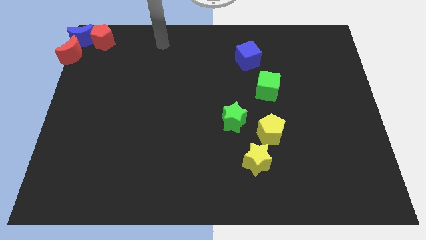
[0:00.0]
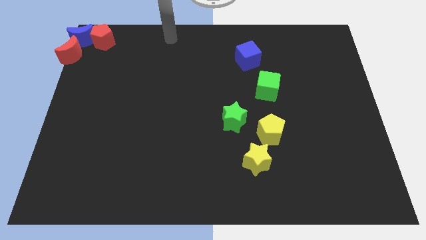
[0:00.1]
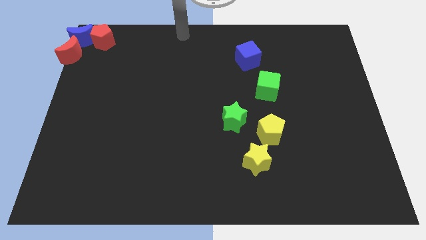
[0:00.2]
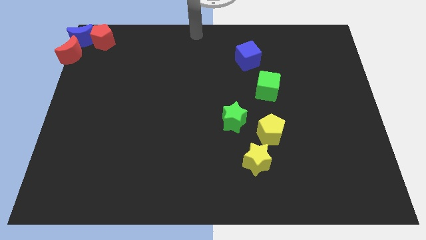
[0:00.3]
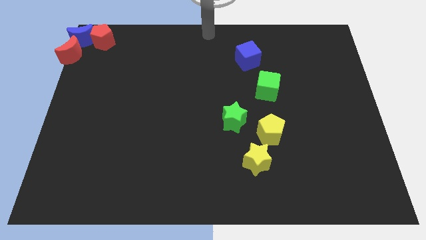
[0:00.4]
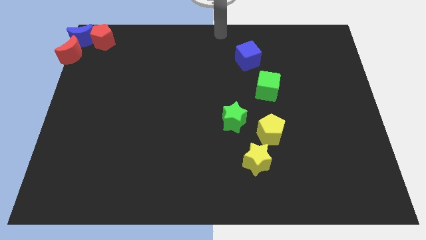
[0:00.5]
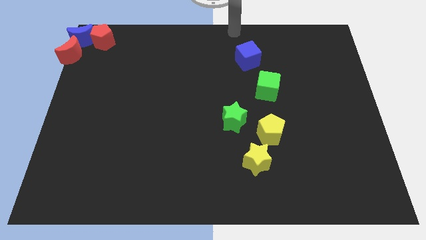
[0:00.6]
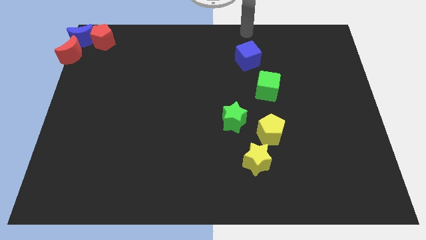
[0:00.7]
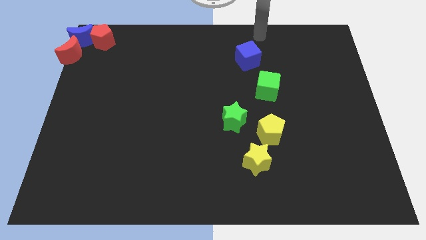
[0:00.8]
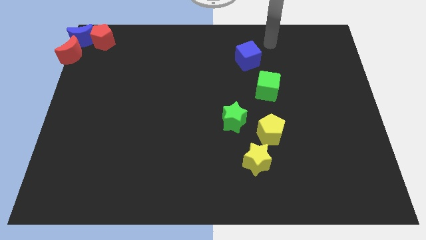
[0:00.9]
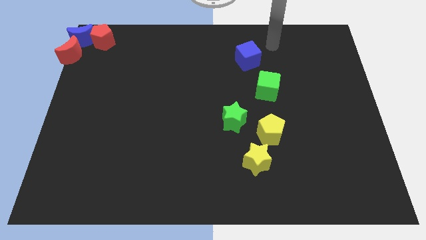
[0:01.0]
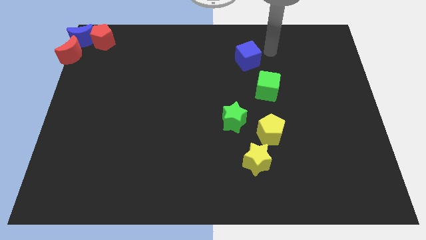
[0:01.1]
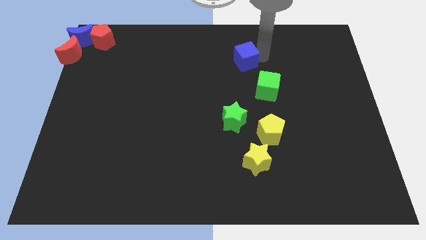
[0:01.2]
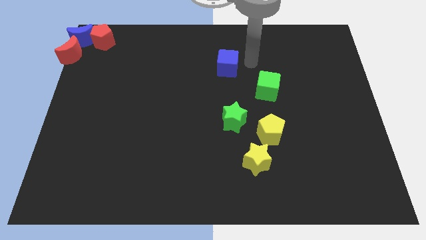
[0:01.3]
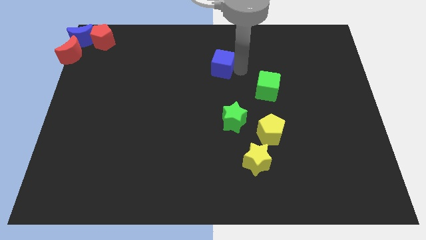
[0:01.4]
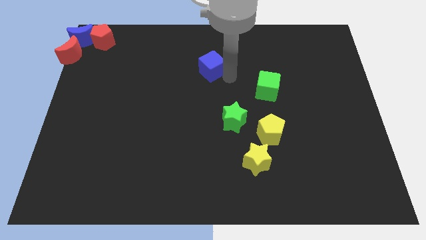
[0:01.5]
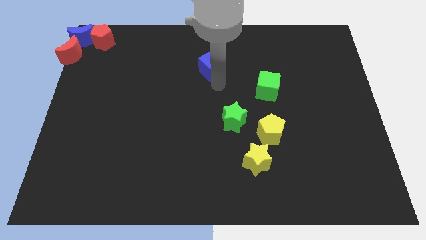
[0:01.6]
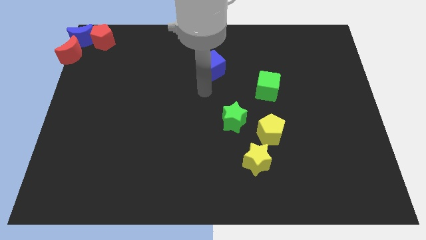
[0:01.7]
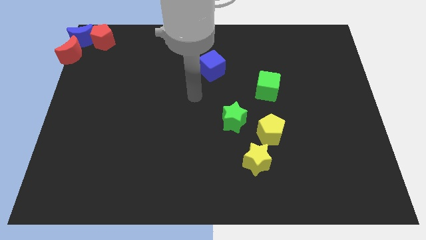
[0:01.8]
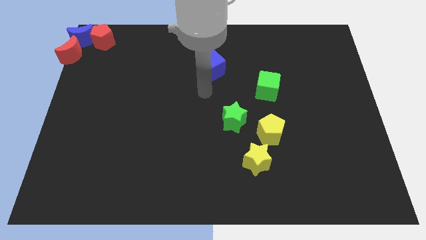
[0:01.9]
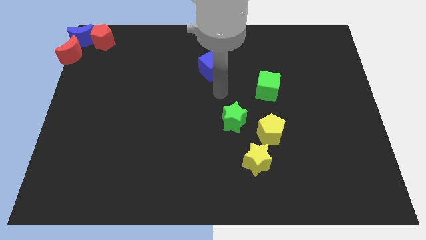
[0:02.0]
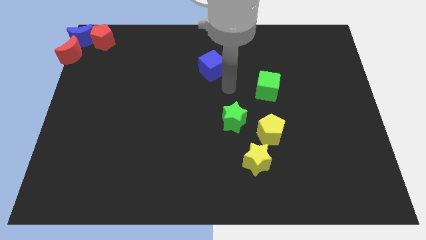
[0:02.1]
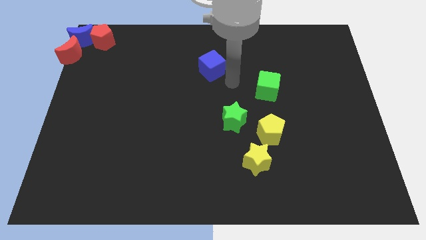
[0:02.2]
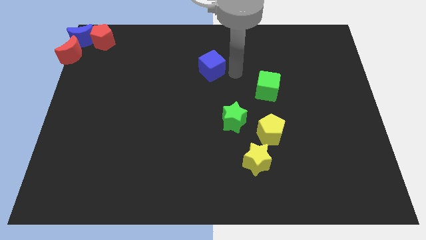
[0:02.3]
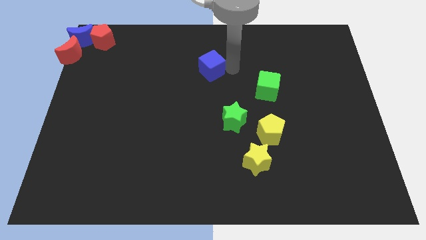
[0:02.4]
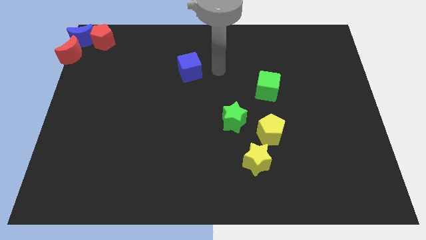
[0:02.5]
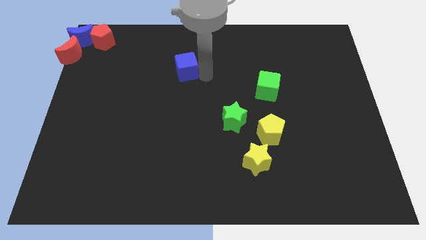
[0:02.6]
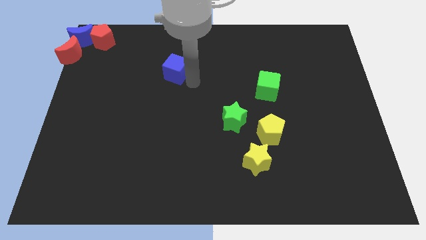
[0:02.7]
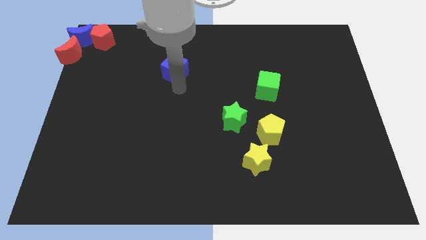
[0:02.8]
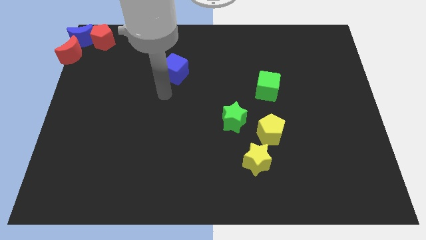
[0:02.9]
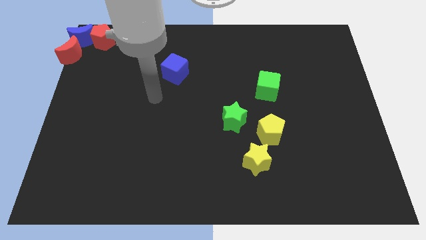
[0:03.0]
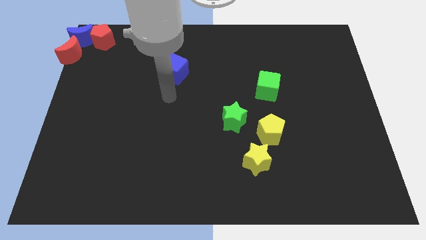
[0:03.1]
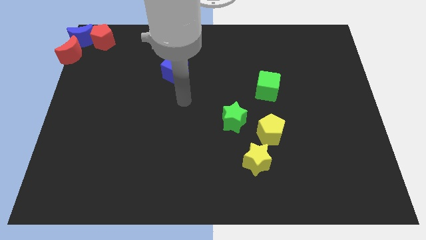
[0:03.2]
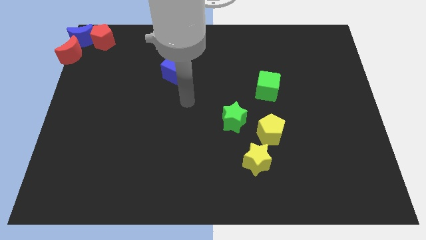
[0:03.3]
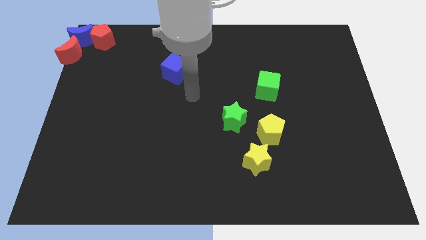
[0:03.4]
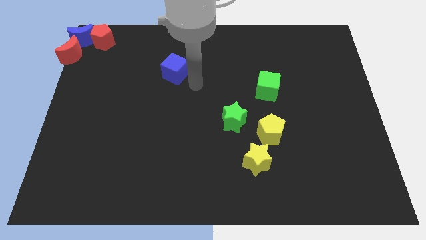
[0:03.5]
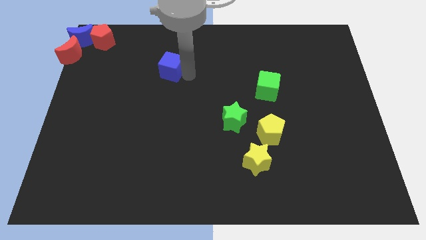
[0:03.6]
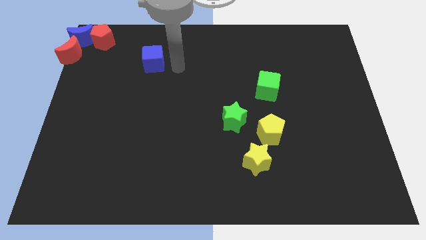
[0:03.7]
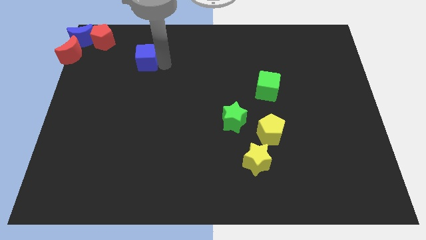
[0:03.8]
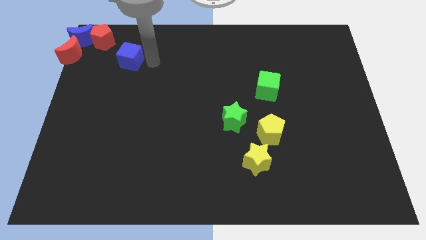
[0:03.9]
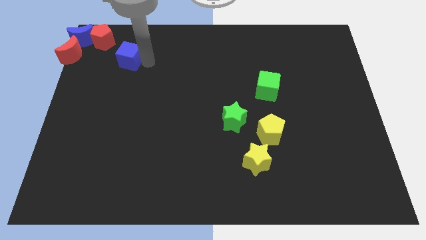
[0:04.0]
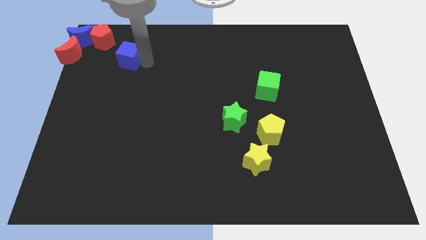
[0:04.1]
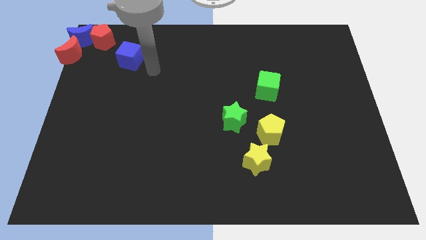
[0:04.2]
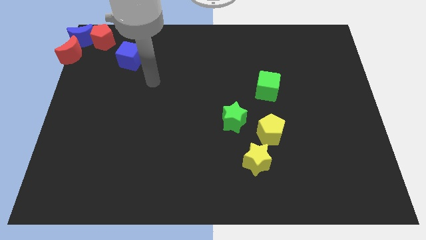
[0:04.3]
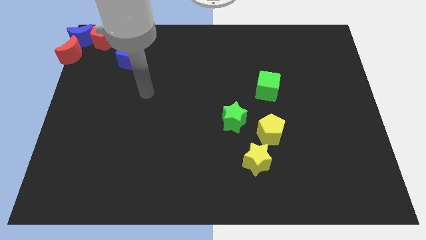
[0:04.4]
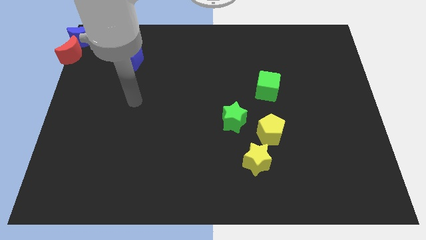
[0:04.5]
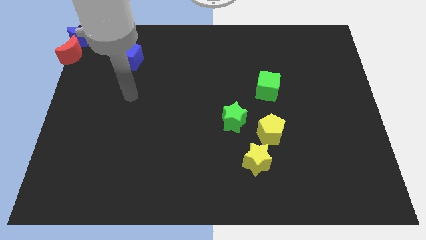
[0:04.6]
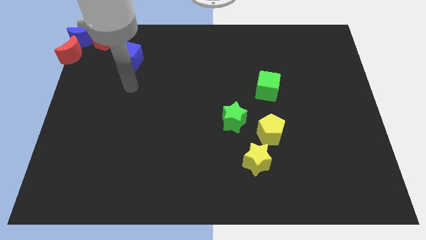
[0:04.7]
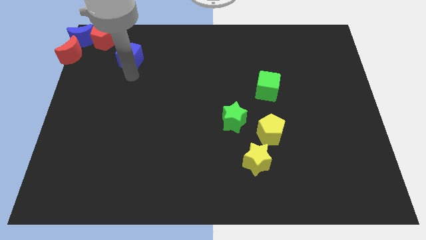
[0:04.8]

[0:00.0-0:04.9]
push the blue cube towards the red pentagon

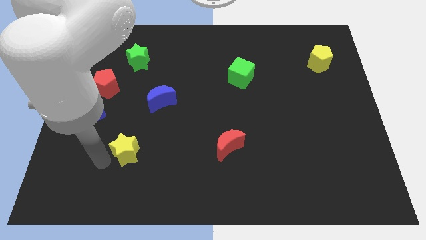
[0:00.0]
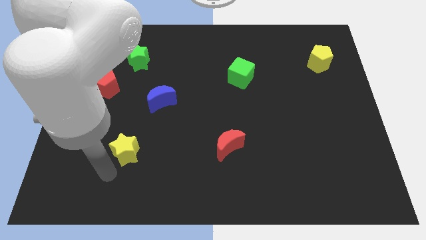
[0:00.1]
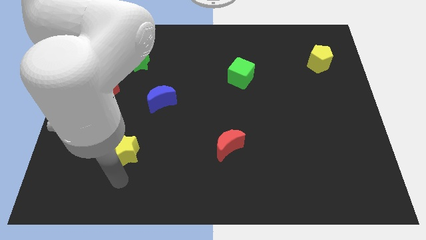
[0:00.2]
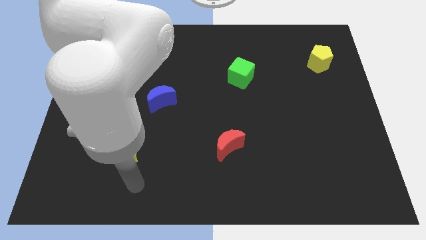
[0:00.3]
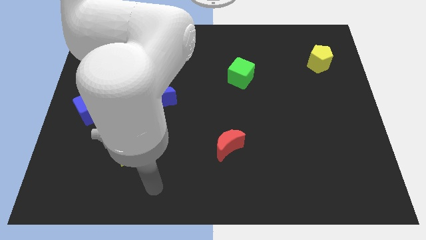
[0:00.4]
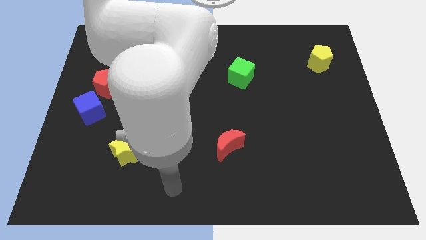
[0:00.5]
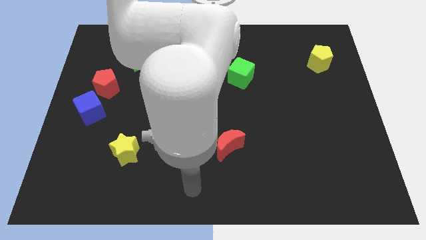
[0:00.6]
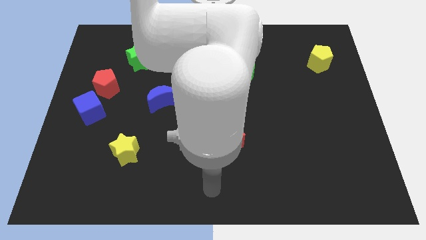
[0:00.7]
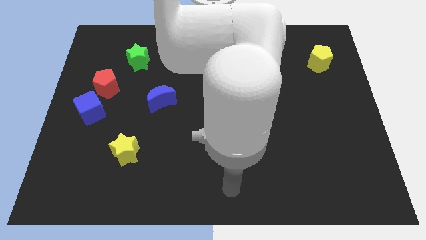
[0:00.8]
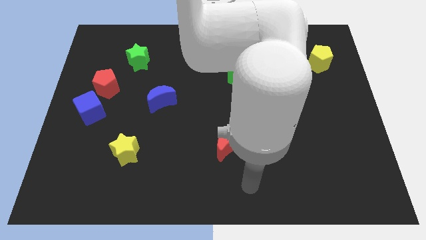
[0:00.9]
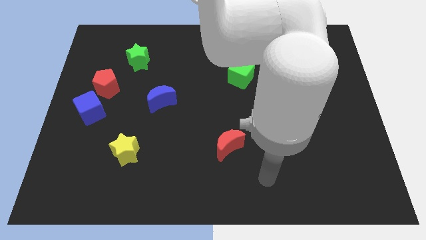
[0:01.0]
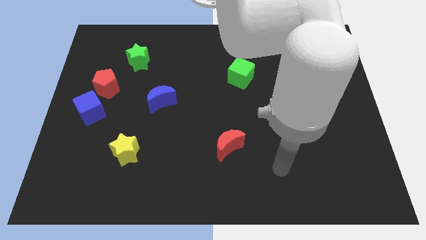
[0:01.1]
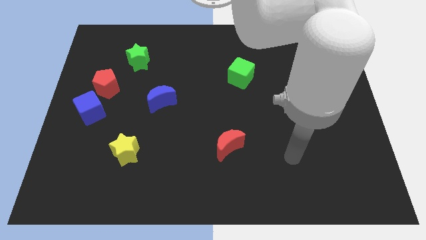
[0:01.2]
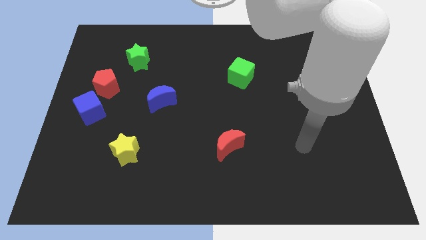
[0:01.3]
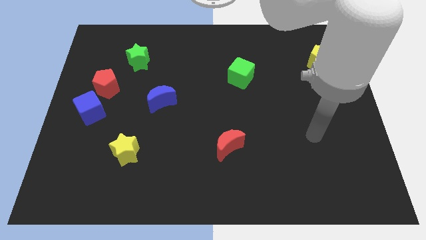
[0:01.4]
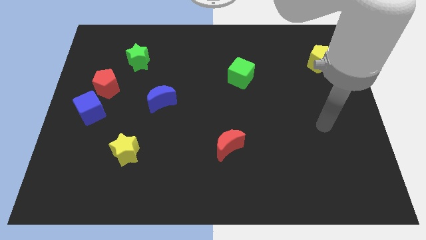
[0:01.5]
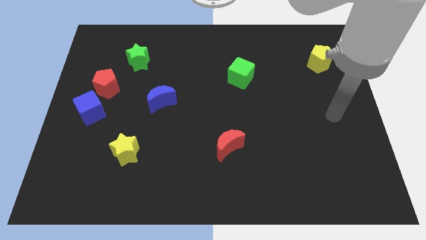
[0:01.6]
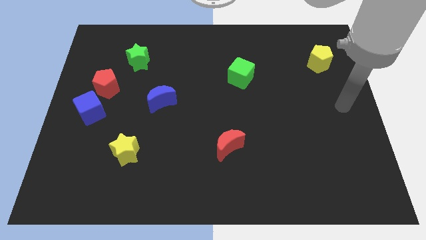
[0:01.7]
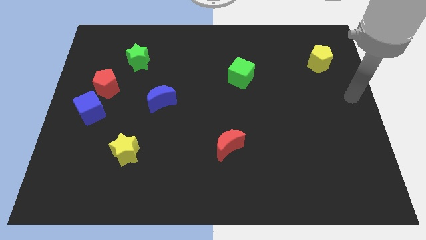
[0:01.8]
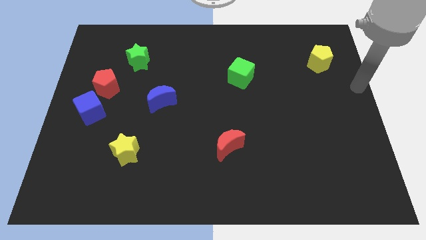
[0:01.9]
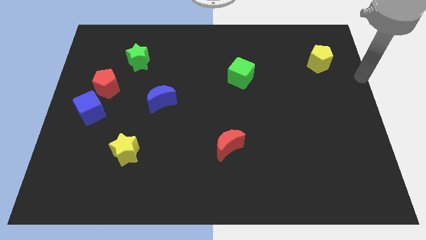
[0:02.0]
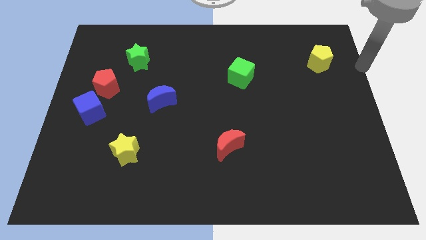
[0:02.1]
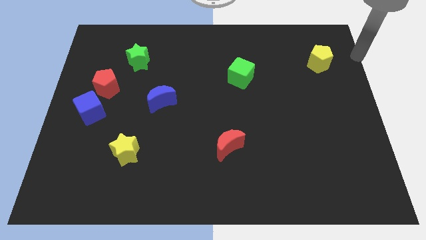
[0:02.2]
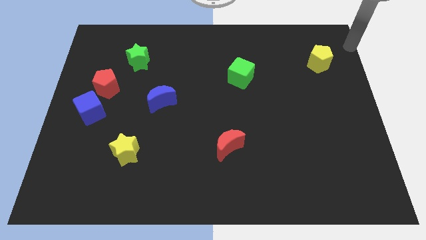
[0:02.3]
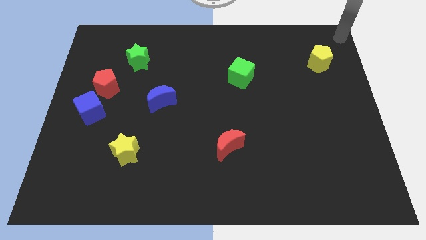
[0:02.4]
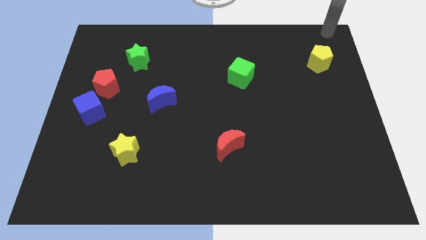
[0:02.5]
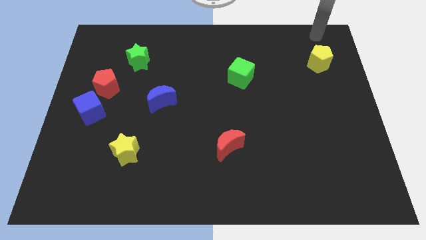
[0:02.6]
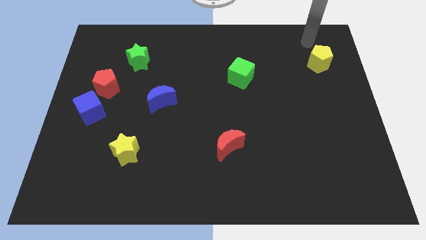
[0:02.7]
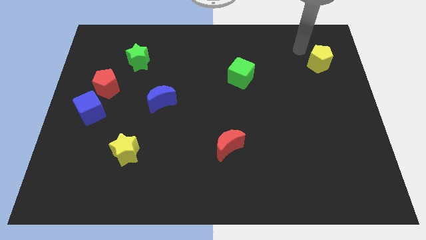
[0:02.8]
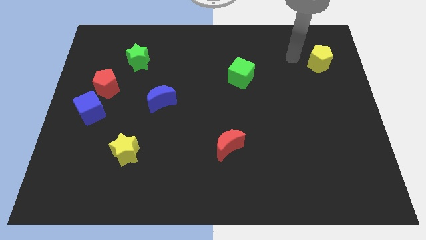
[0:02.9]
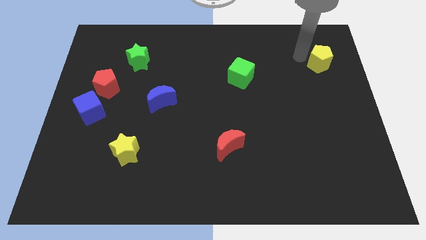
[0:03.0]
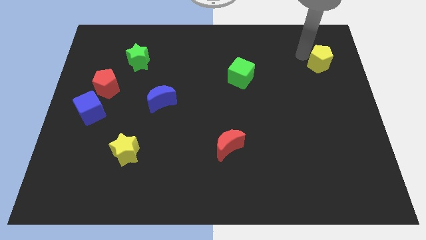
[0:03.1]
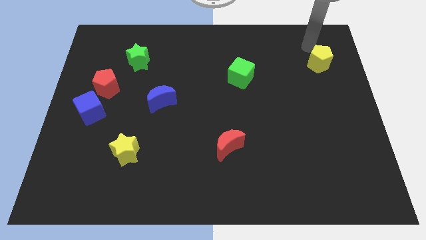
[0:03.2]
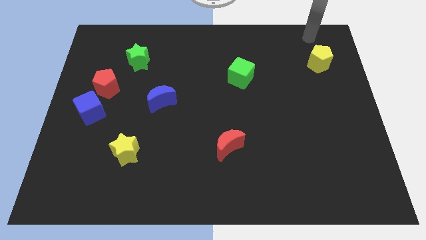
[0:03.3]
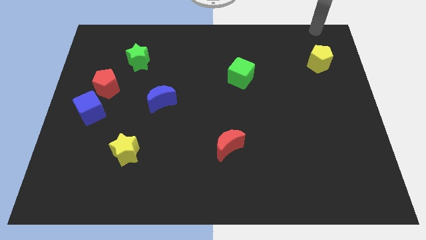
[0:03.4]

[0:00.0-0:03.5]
point your arm at the top side of the yellow pentagon

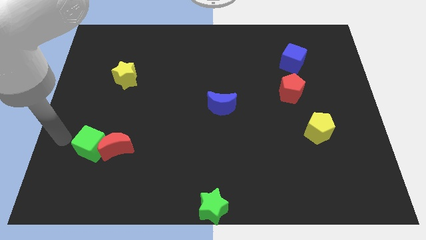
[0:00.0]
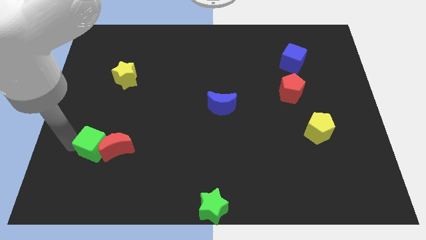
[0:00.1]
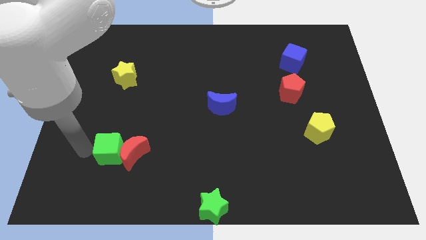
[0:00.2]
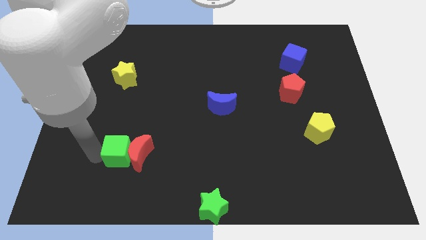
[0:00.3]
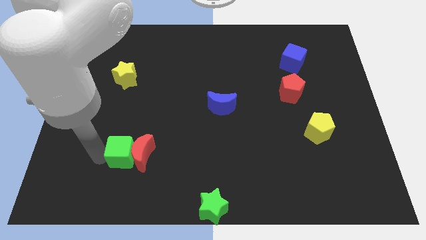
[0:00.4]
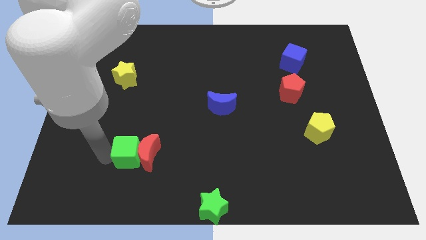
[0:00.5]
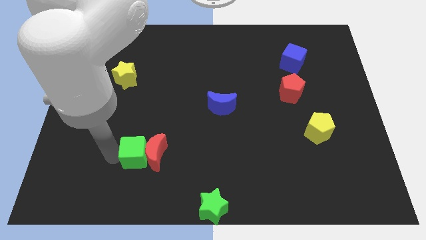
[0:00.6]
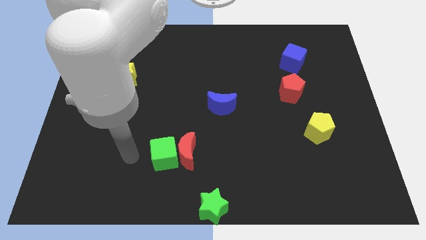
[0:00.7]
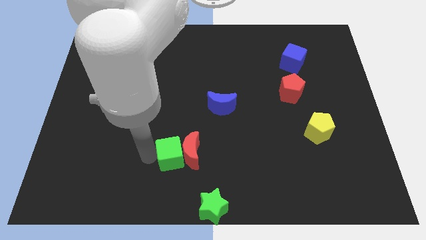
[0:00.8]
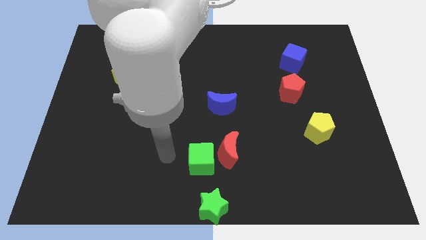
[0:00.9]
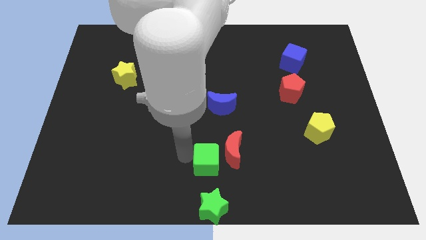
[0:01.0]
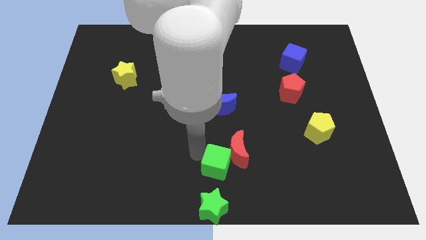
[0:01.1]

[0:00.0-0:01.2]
push the green cube and red moon towards the right side of the board
